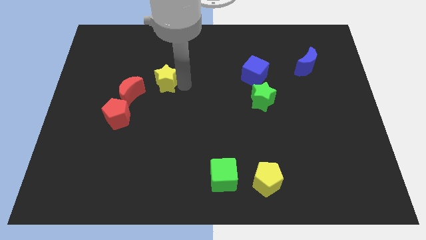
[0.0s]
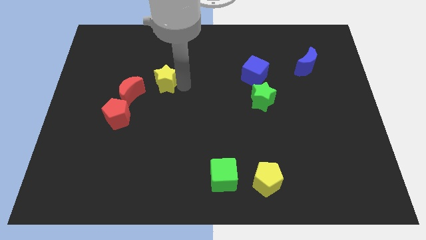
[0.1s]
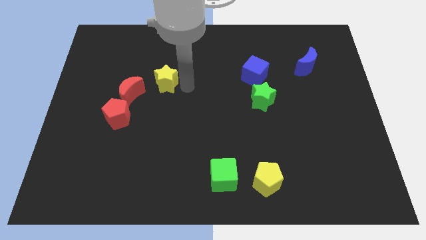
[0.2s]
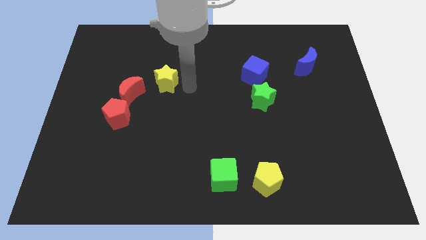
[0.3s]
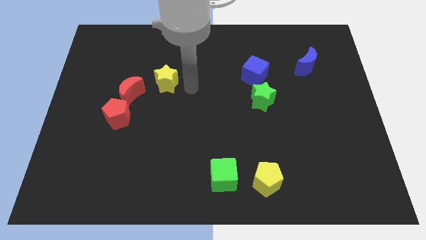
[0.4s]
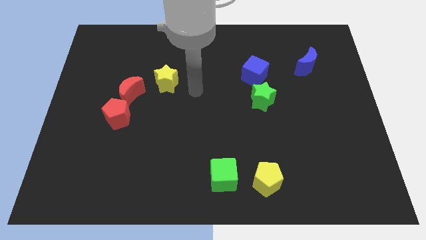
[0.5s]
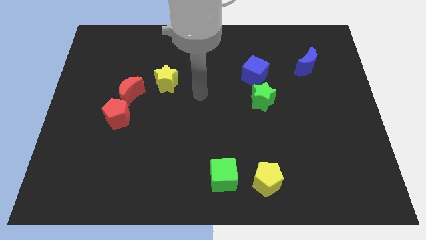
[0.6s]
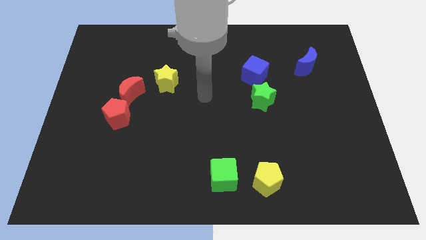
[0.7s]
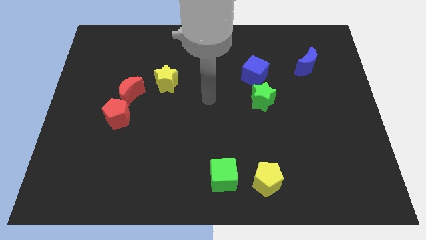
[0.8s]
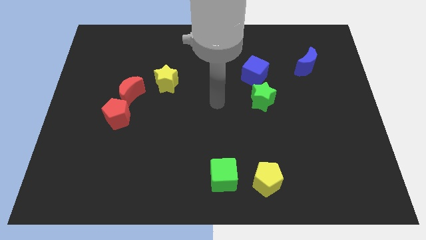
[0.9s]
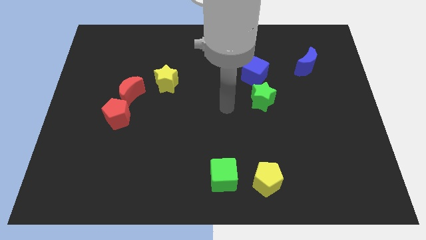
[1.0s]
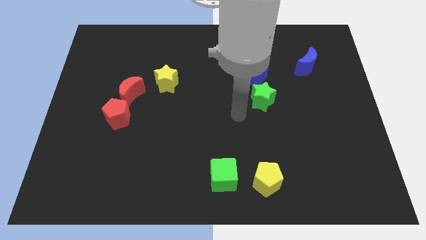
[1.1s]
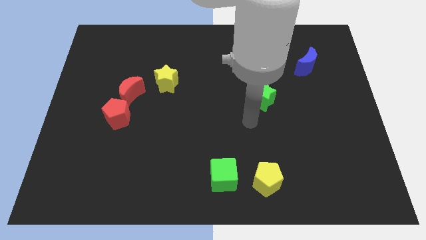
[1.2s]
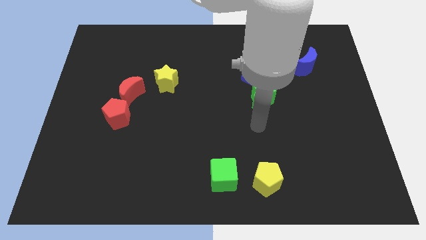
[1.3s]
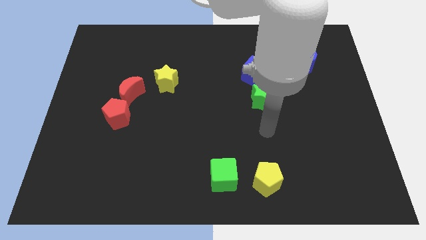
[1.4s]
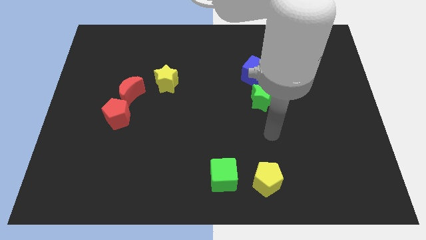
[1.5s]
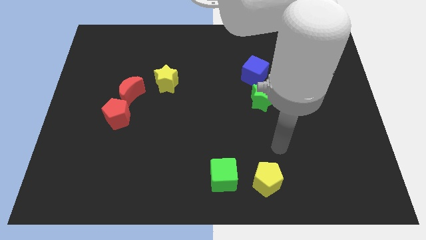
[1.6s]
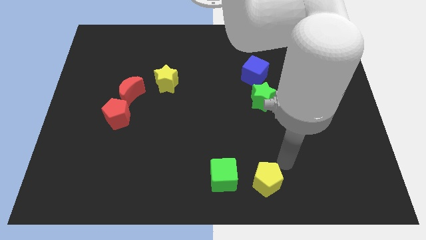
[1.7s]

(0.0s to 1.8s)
move the arm away from the yellow star

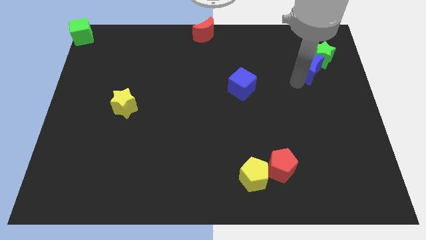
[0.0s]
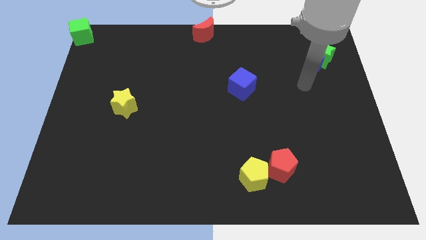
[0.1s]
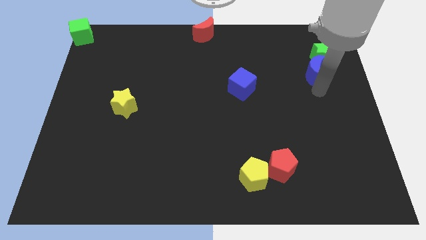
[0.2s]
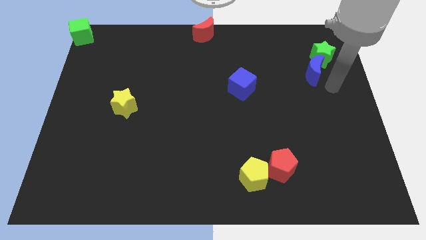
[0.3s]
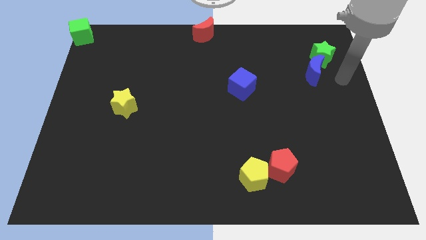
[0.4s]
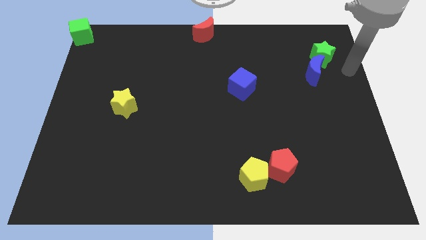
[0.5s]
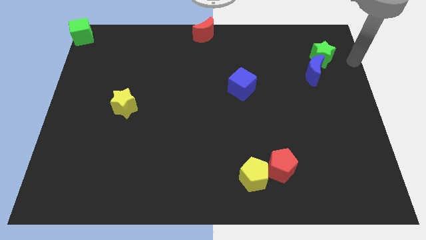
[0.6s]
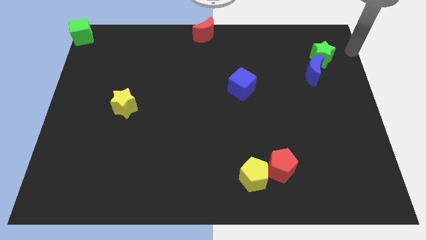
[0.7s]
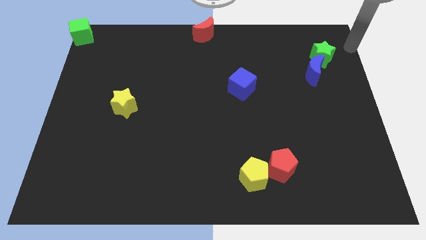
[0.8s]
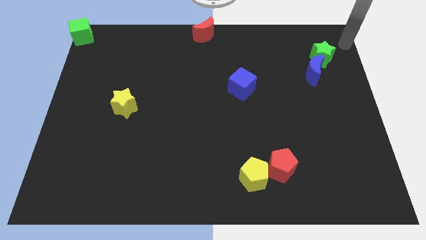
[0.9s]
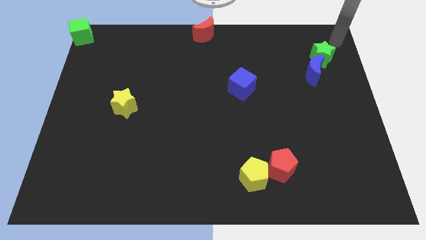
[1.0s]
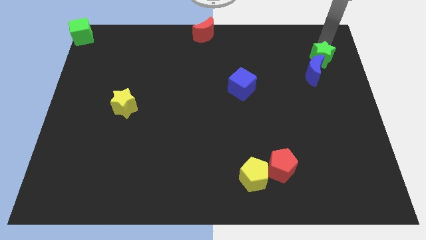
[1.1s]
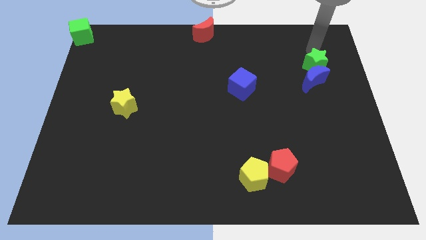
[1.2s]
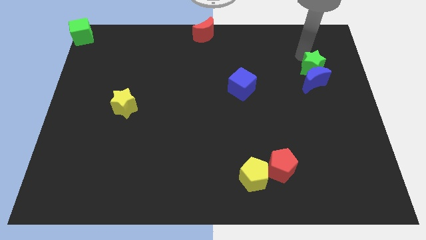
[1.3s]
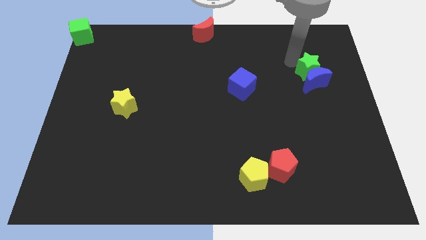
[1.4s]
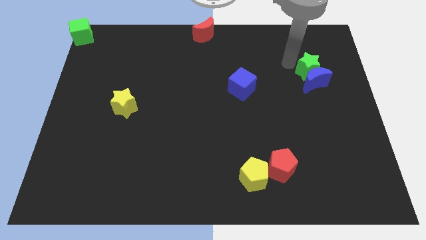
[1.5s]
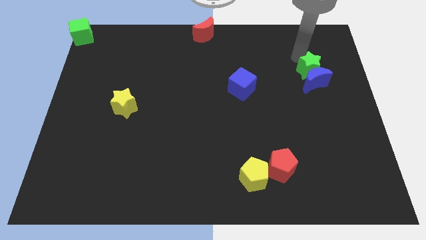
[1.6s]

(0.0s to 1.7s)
push the green star into the blue moon

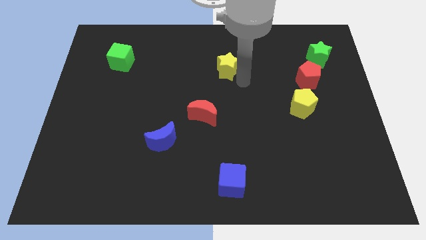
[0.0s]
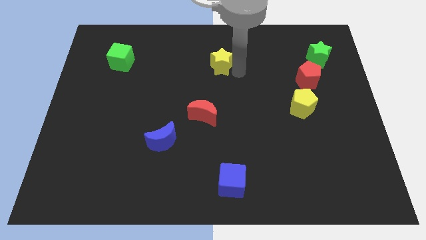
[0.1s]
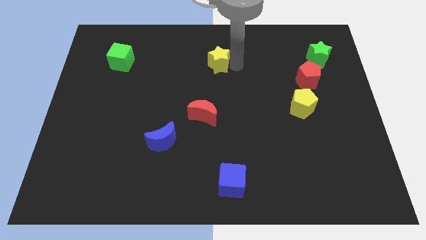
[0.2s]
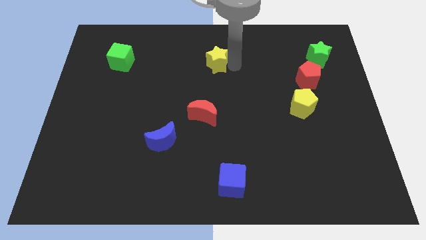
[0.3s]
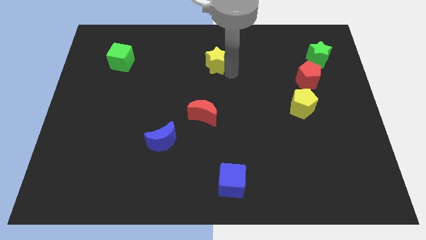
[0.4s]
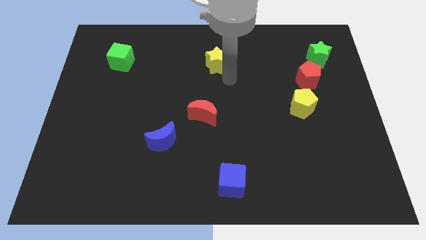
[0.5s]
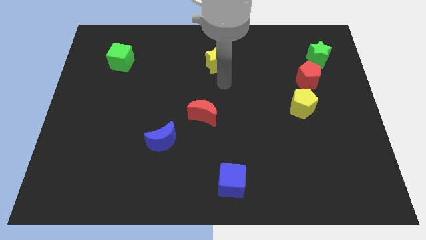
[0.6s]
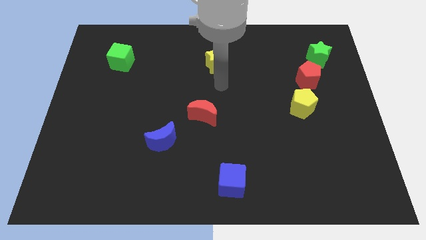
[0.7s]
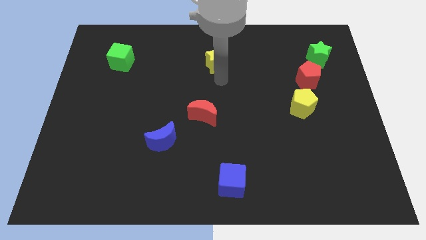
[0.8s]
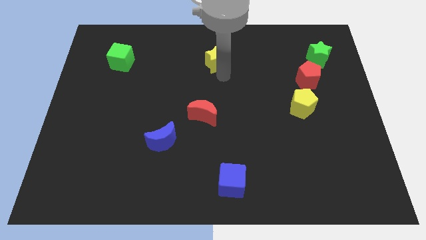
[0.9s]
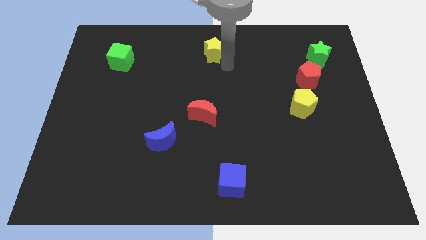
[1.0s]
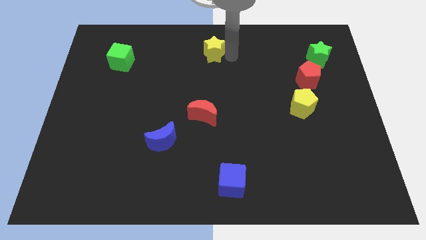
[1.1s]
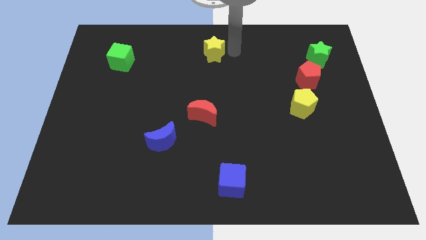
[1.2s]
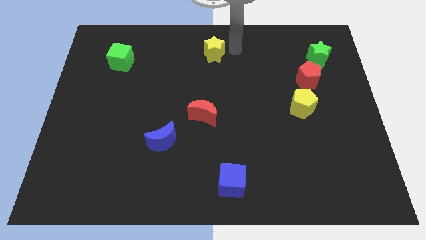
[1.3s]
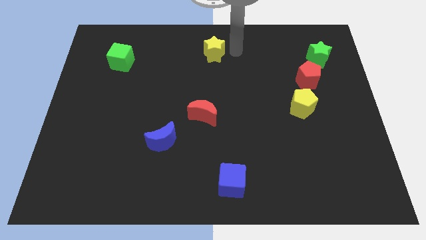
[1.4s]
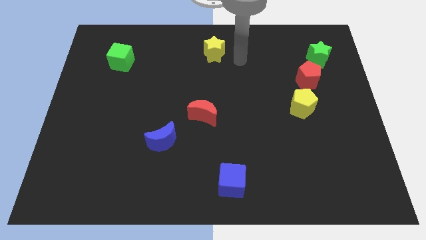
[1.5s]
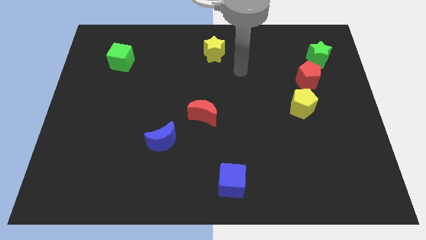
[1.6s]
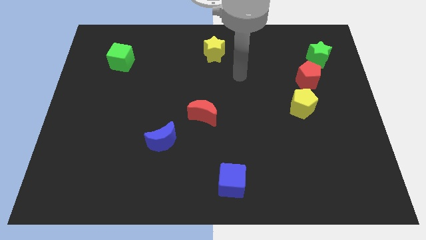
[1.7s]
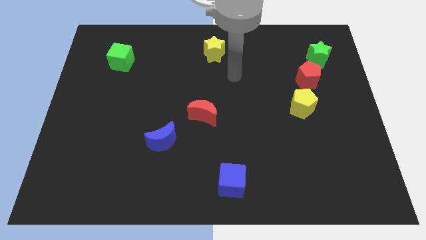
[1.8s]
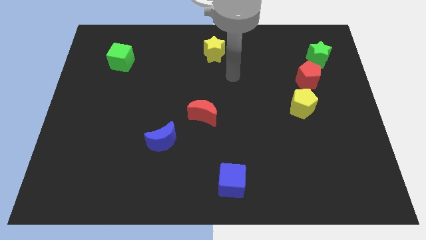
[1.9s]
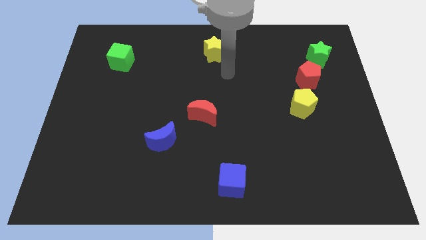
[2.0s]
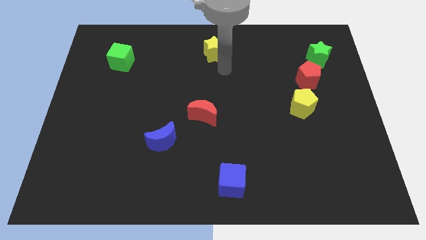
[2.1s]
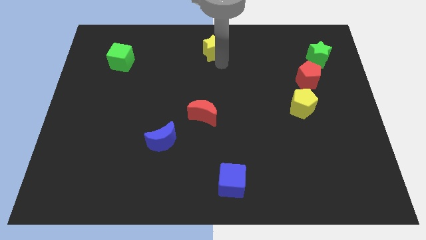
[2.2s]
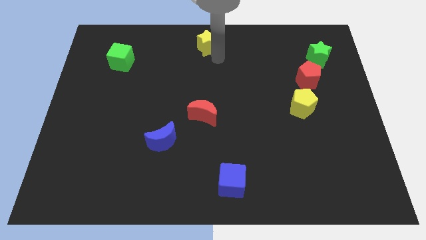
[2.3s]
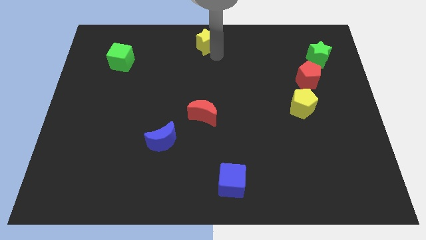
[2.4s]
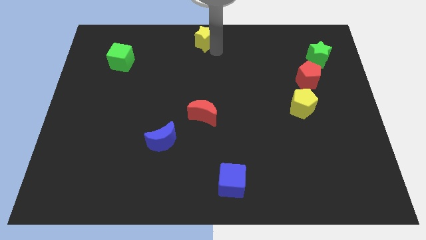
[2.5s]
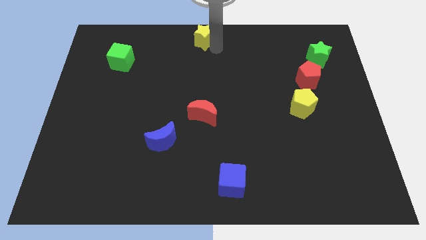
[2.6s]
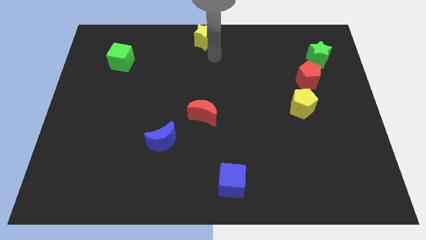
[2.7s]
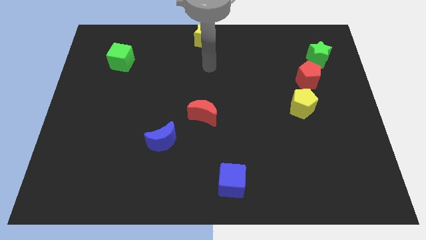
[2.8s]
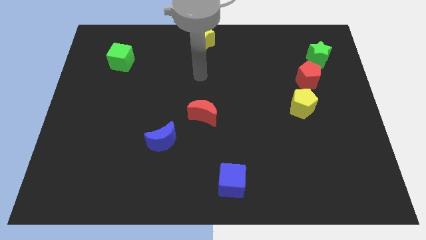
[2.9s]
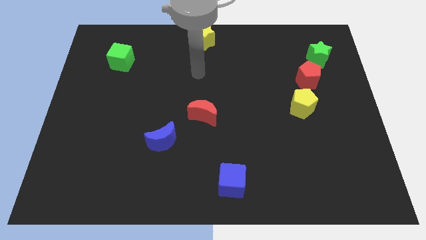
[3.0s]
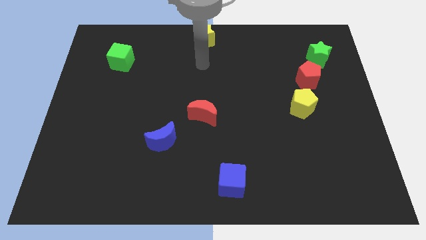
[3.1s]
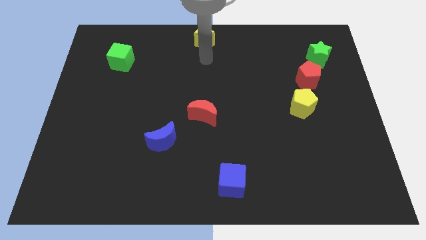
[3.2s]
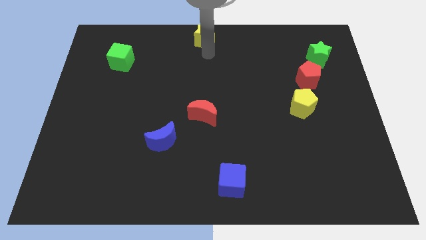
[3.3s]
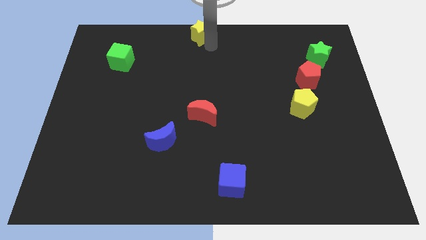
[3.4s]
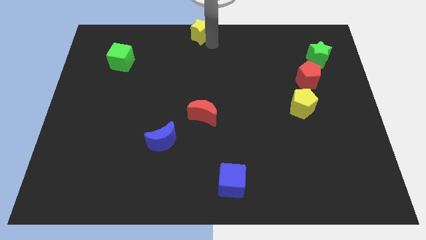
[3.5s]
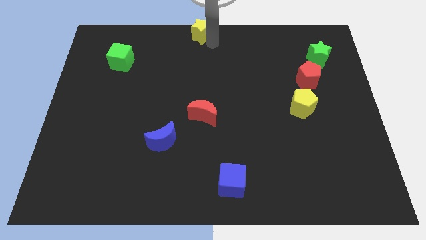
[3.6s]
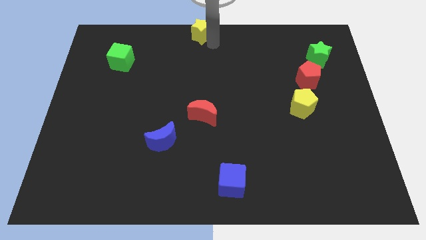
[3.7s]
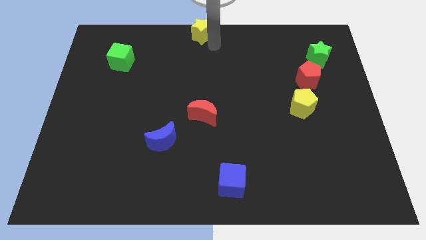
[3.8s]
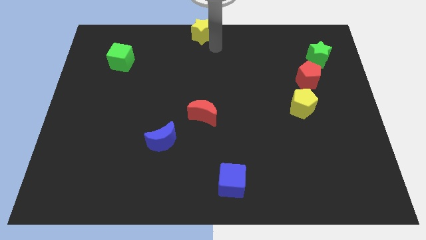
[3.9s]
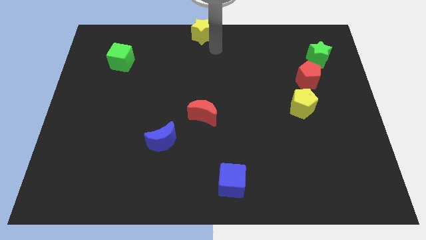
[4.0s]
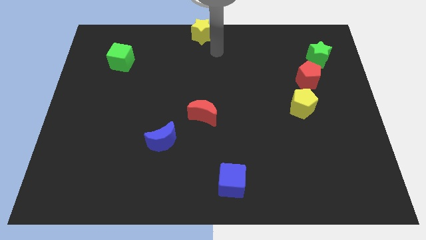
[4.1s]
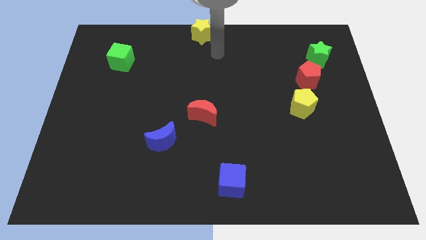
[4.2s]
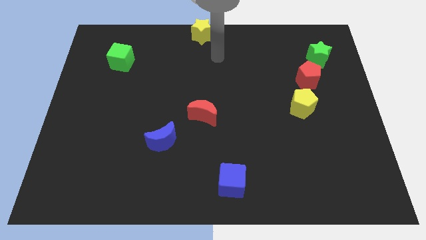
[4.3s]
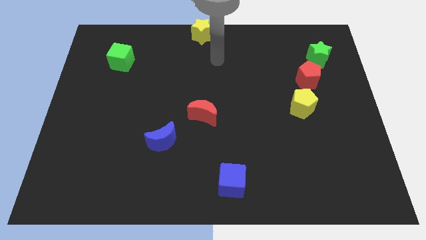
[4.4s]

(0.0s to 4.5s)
push the yellow star to top center of the board

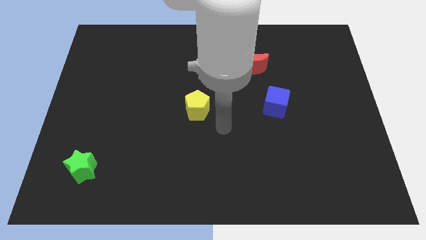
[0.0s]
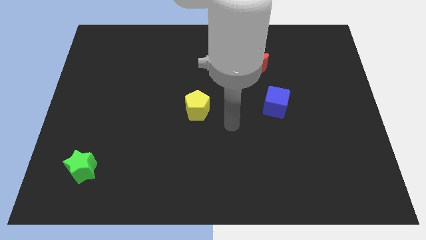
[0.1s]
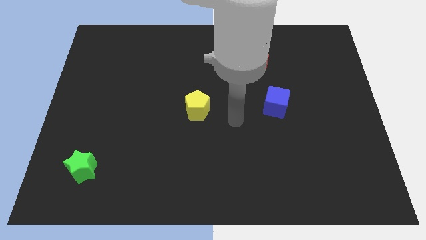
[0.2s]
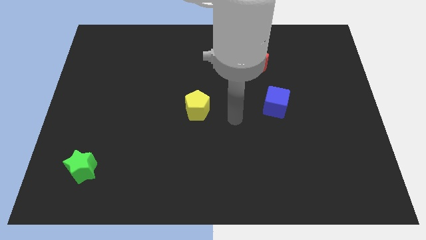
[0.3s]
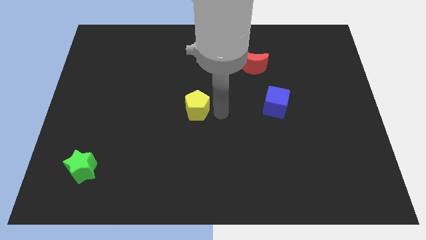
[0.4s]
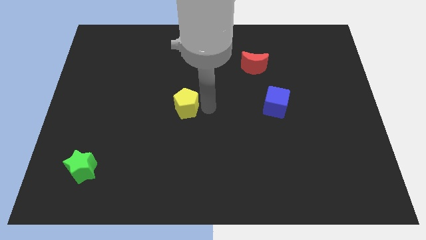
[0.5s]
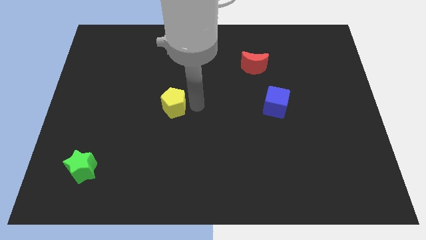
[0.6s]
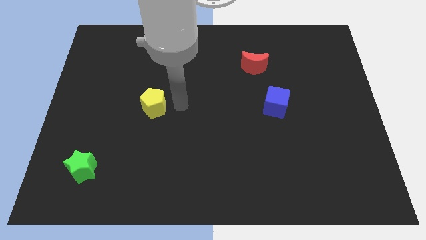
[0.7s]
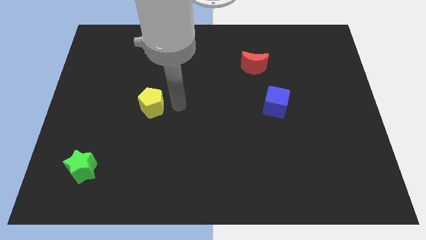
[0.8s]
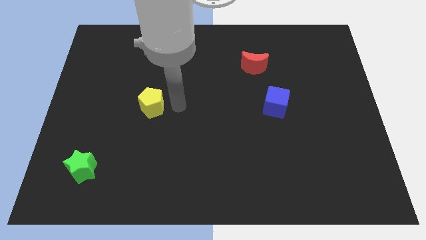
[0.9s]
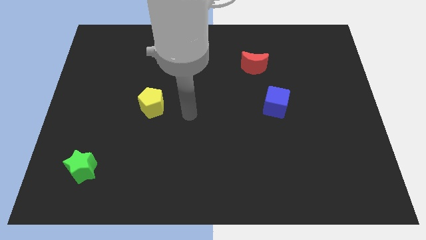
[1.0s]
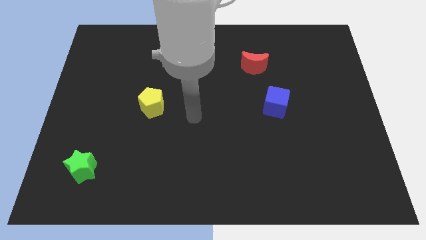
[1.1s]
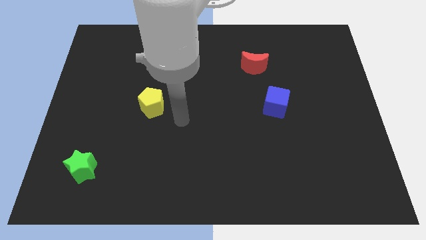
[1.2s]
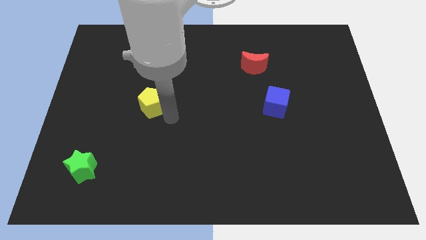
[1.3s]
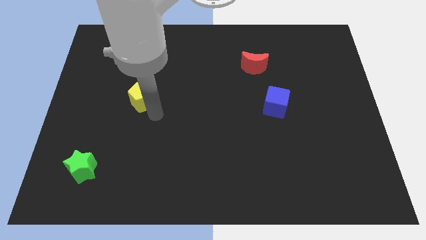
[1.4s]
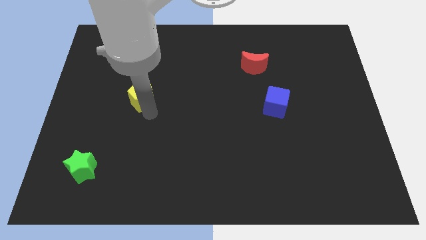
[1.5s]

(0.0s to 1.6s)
push the yellow pentagon to the left side of the table
